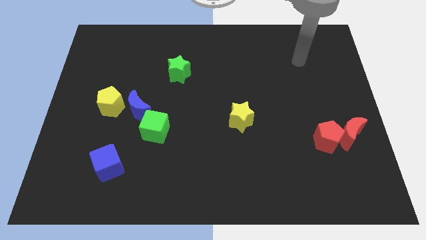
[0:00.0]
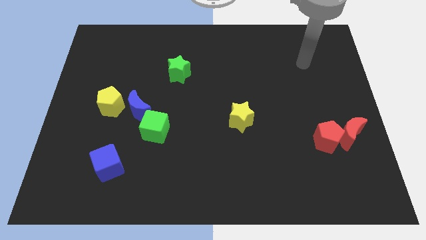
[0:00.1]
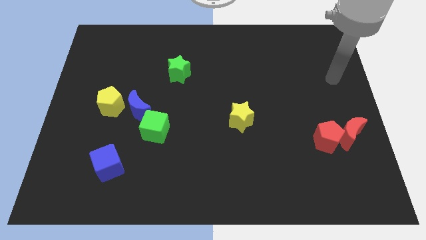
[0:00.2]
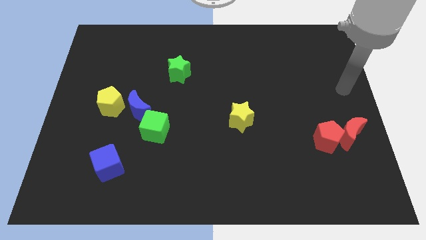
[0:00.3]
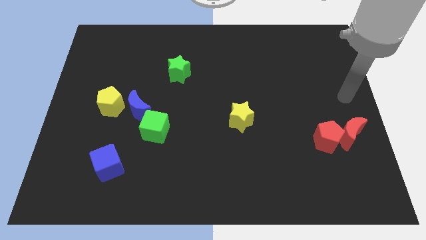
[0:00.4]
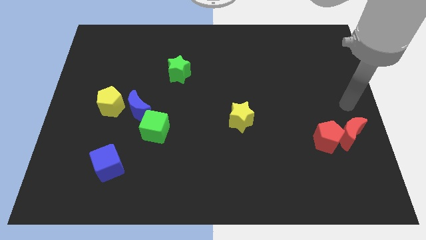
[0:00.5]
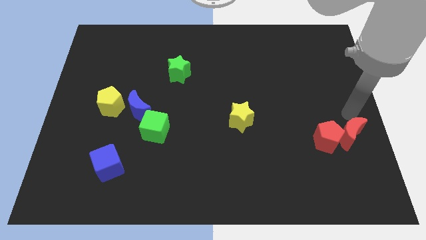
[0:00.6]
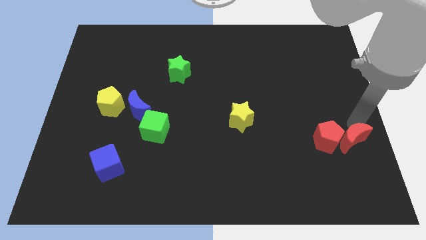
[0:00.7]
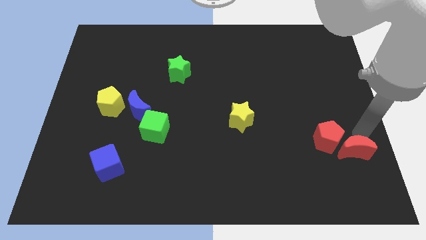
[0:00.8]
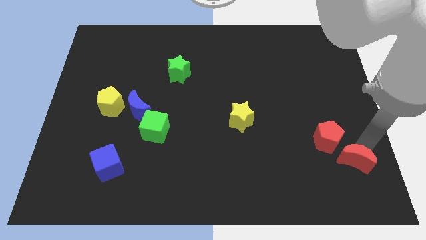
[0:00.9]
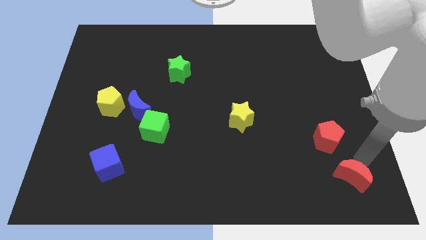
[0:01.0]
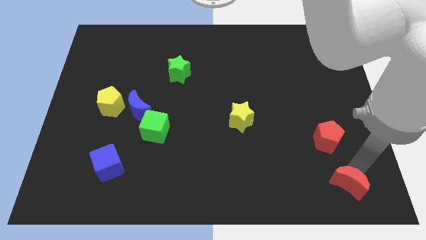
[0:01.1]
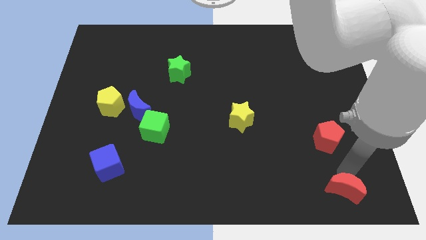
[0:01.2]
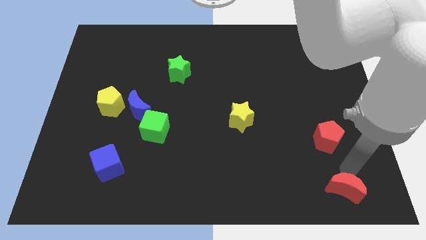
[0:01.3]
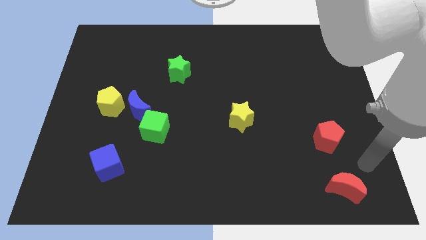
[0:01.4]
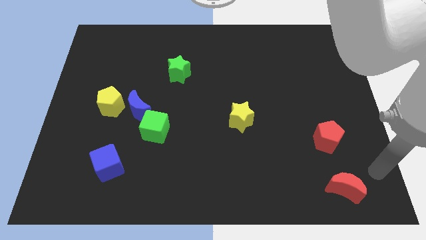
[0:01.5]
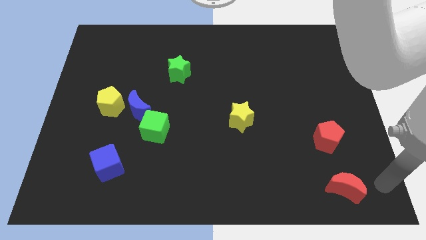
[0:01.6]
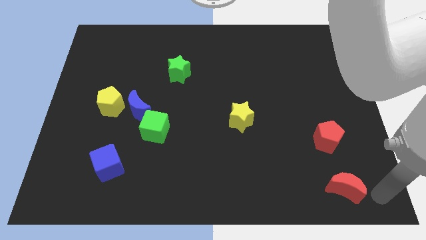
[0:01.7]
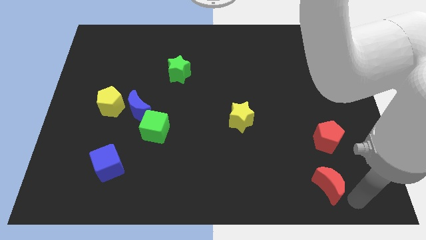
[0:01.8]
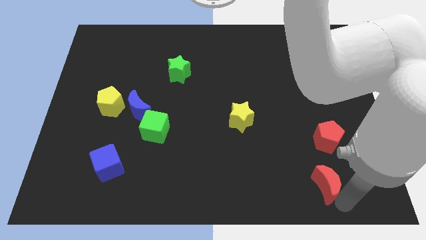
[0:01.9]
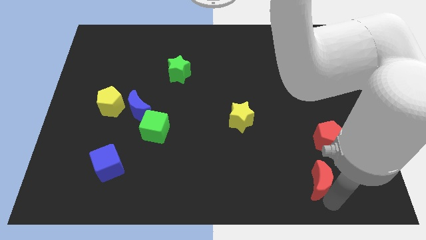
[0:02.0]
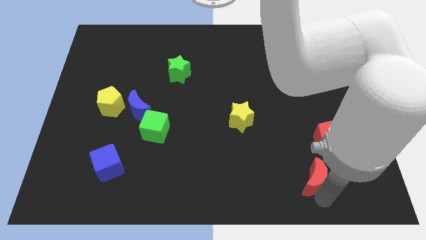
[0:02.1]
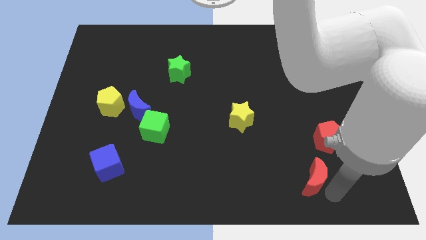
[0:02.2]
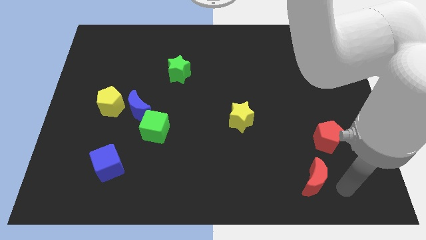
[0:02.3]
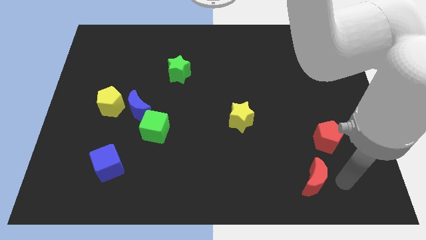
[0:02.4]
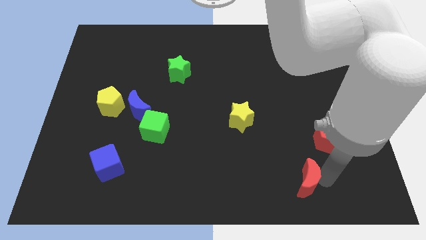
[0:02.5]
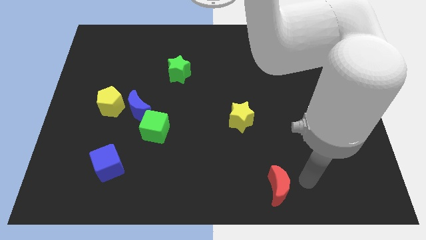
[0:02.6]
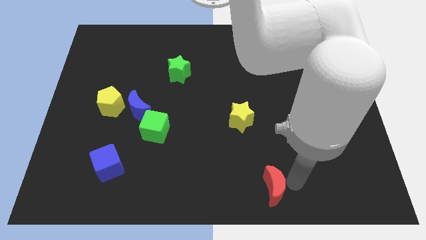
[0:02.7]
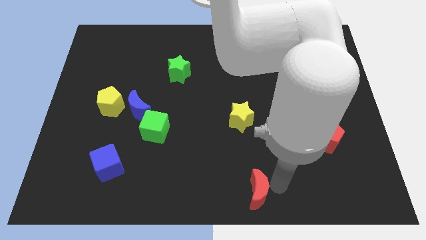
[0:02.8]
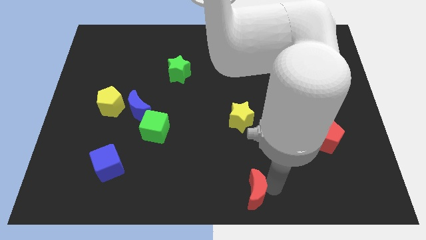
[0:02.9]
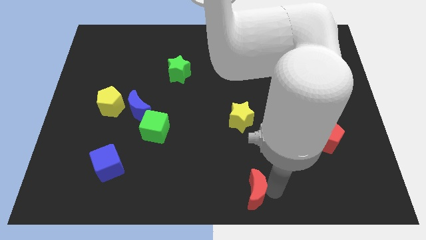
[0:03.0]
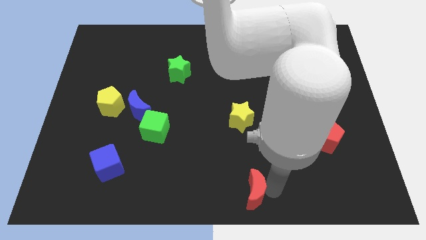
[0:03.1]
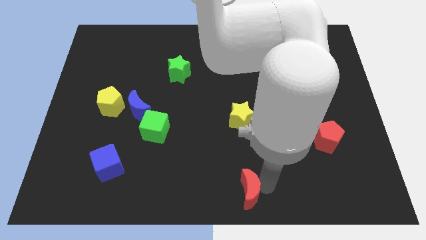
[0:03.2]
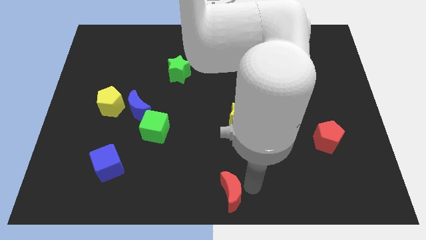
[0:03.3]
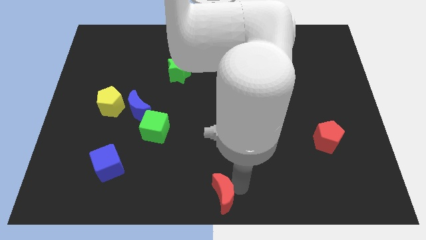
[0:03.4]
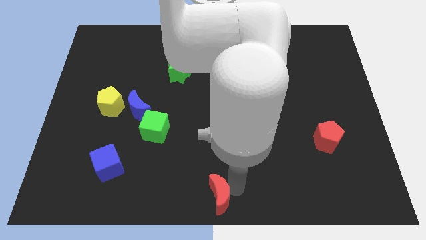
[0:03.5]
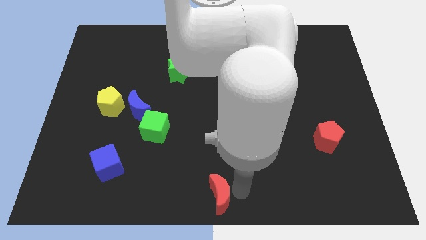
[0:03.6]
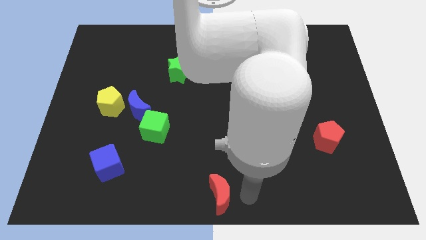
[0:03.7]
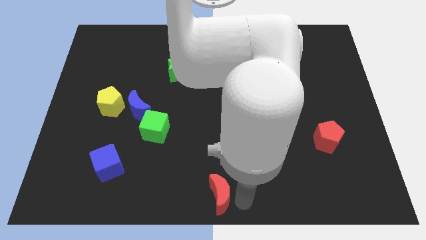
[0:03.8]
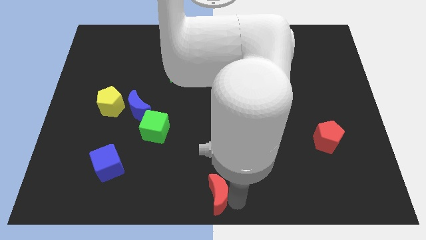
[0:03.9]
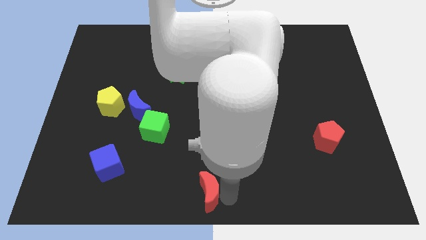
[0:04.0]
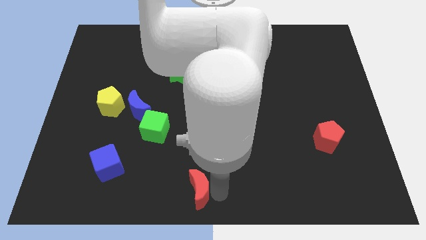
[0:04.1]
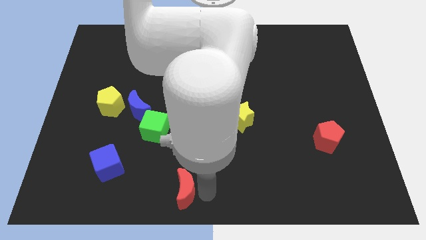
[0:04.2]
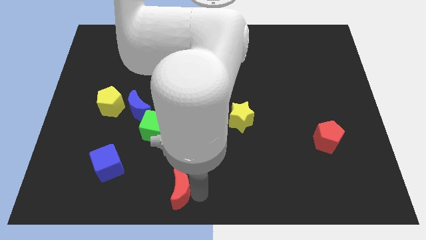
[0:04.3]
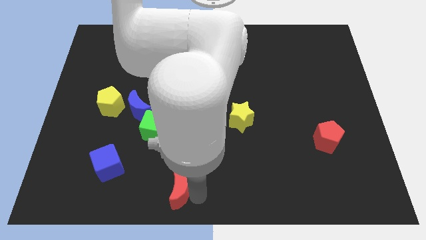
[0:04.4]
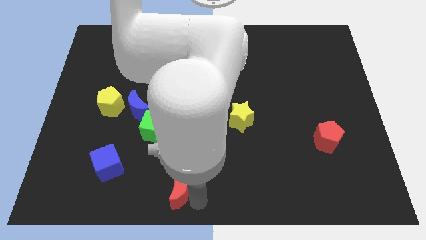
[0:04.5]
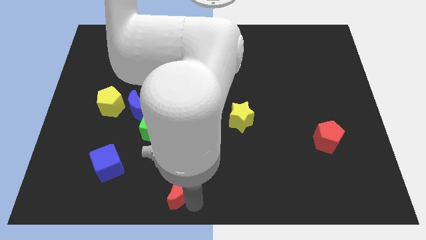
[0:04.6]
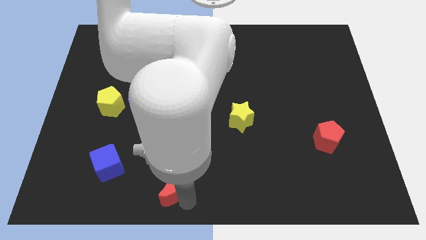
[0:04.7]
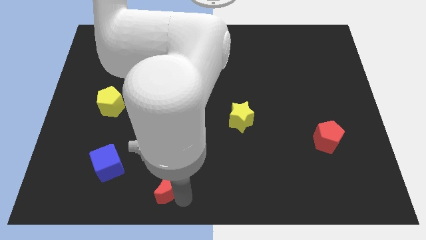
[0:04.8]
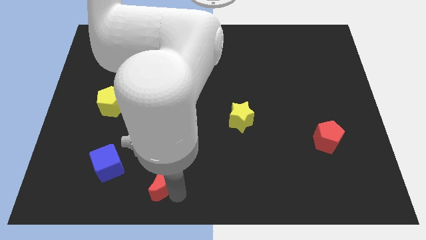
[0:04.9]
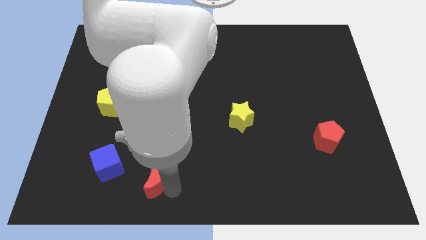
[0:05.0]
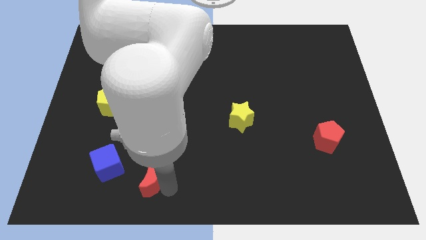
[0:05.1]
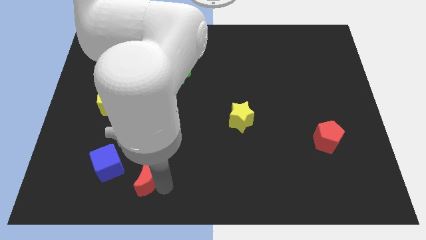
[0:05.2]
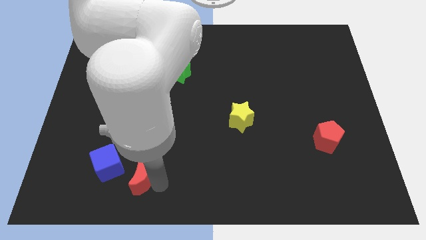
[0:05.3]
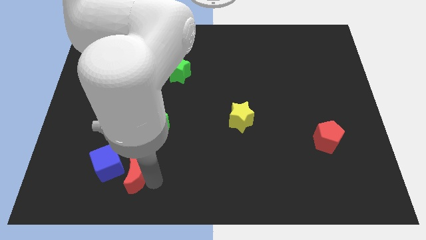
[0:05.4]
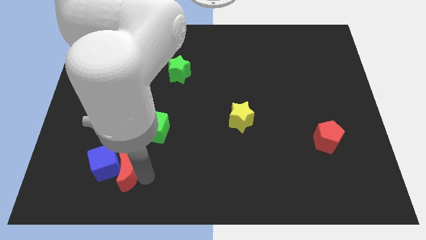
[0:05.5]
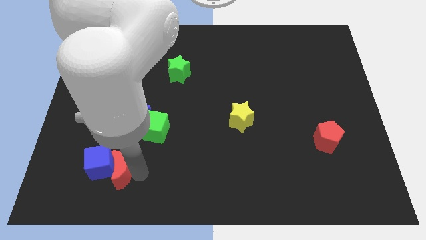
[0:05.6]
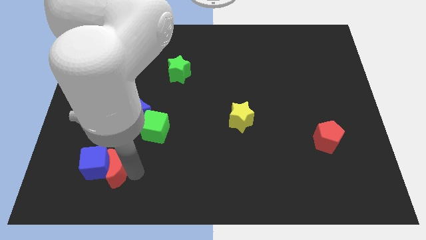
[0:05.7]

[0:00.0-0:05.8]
slide the red moon close to the blue cube

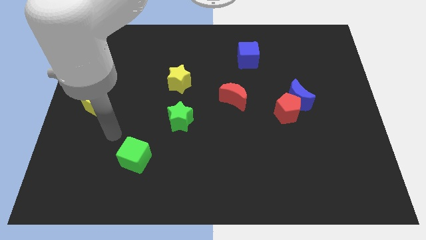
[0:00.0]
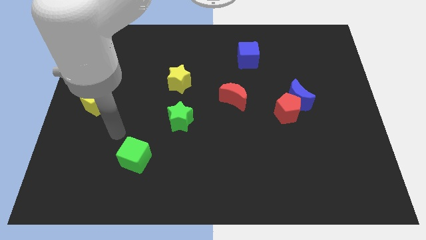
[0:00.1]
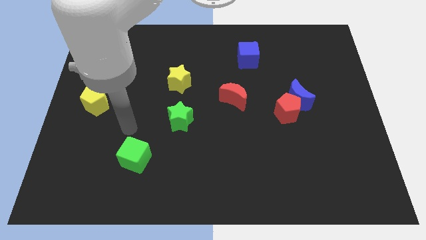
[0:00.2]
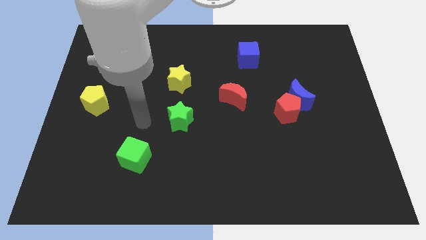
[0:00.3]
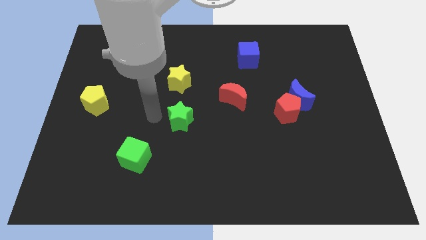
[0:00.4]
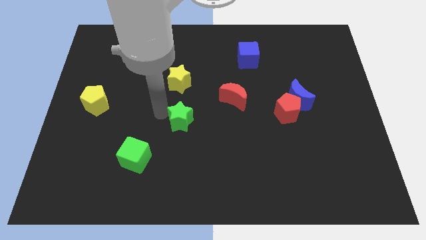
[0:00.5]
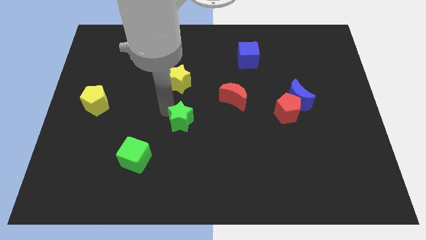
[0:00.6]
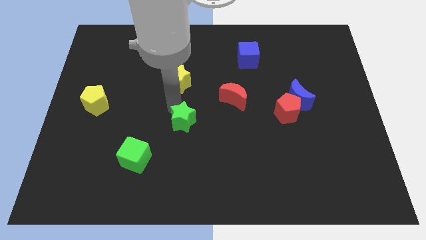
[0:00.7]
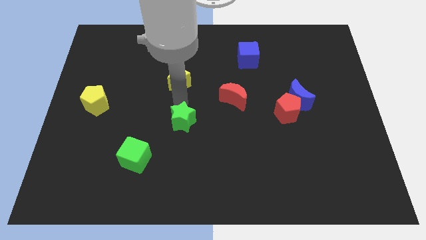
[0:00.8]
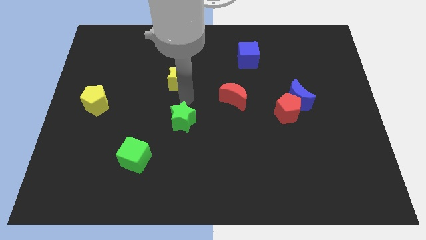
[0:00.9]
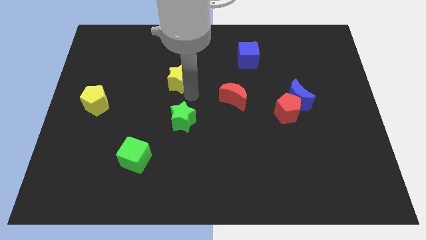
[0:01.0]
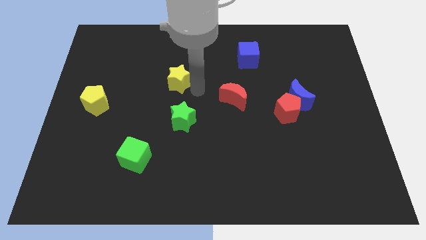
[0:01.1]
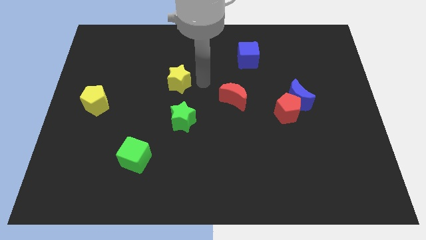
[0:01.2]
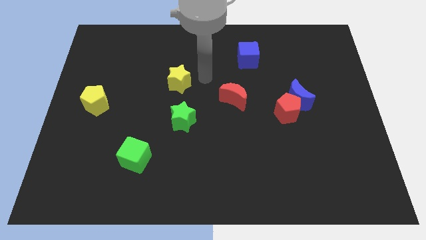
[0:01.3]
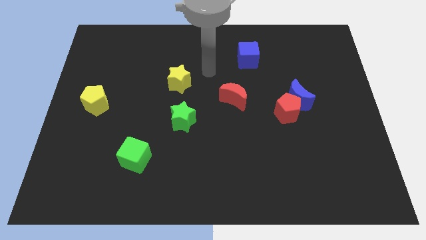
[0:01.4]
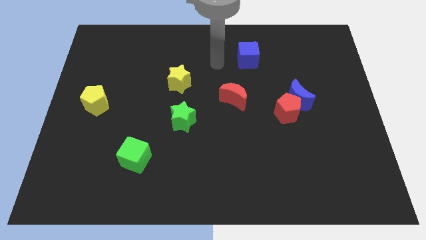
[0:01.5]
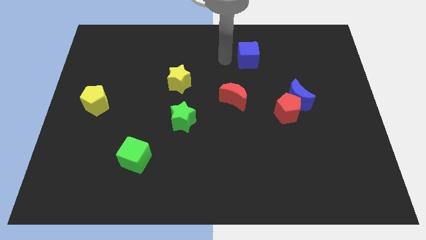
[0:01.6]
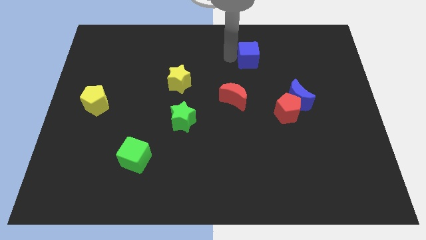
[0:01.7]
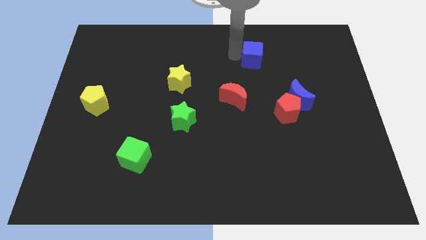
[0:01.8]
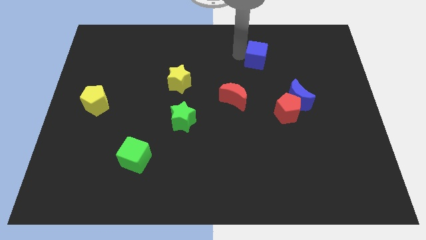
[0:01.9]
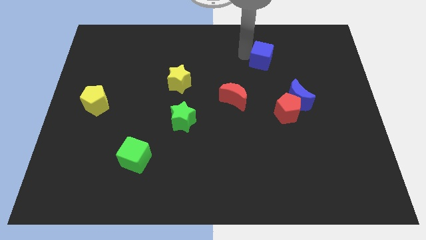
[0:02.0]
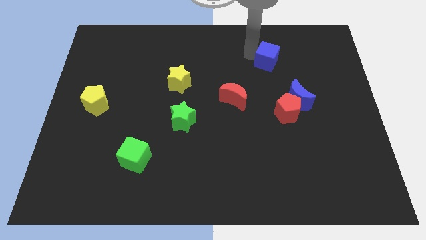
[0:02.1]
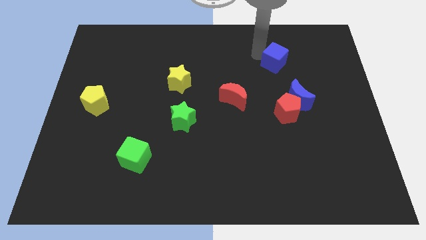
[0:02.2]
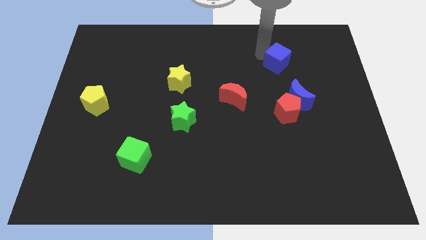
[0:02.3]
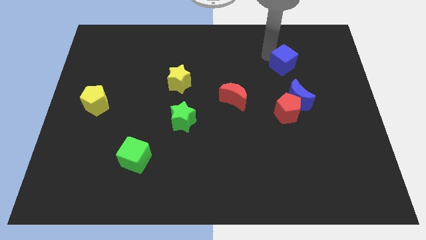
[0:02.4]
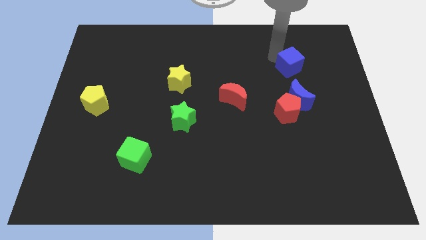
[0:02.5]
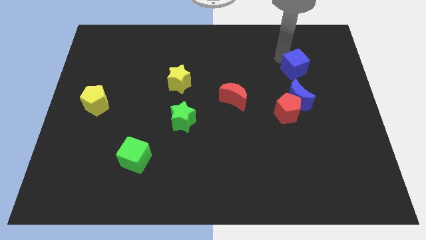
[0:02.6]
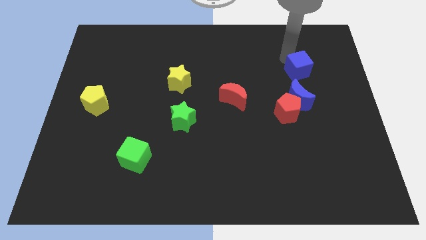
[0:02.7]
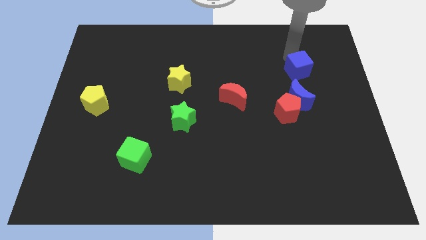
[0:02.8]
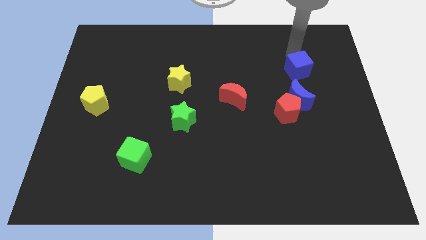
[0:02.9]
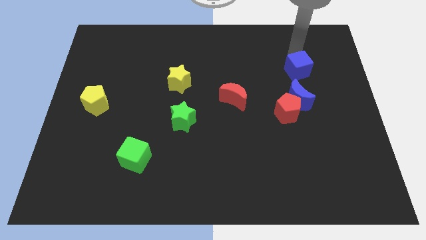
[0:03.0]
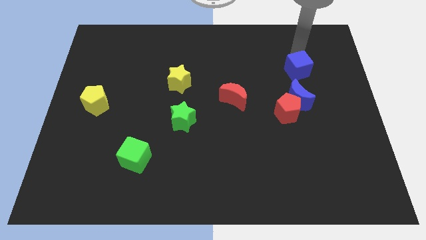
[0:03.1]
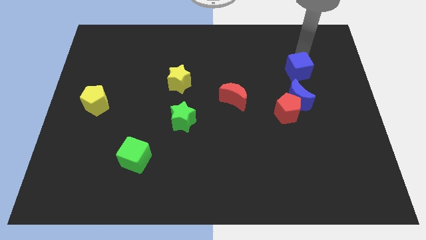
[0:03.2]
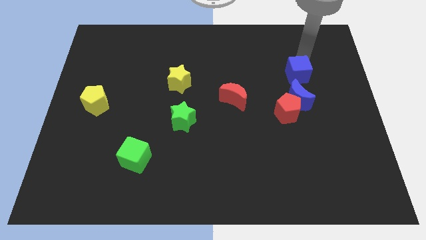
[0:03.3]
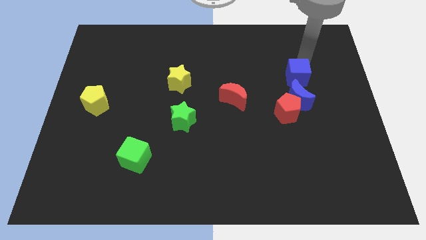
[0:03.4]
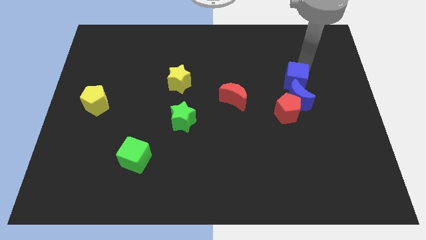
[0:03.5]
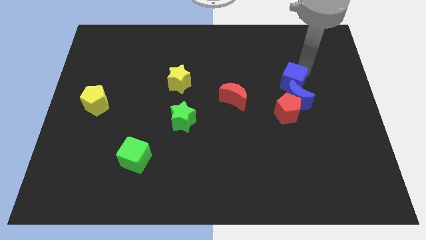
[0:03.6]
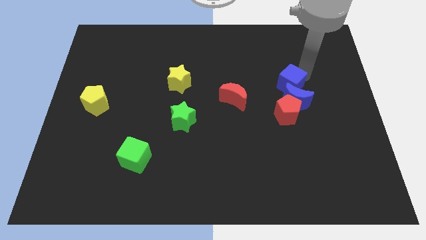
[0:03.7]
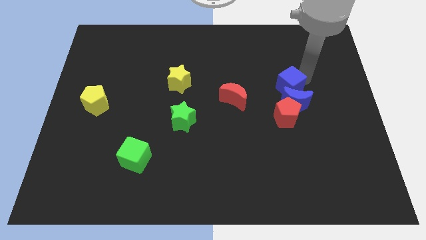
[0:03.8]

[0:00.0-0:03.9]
push the blue cube close to the blue moon
